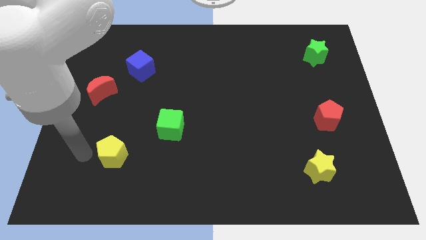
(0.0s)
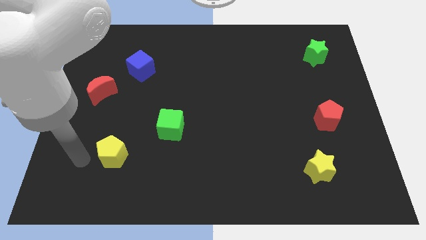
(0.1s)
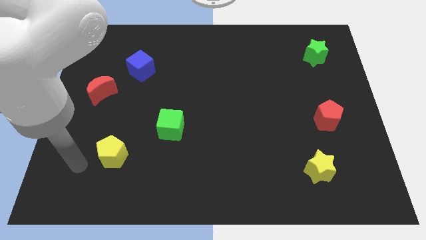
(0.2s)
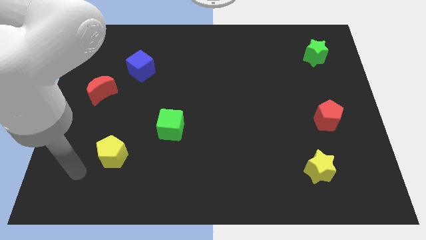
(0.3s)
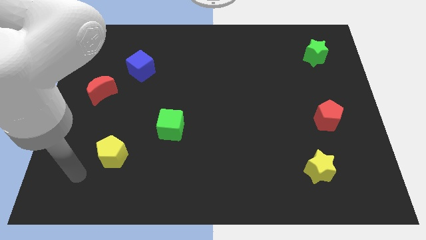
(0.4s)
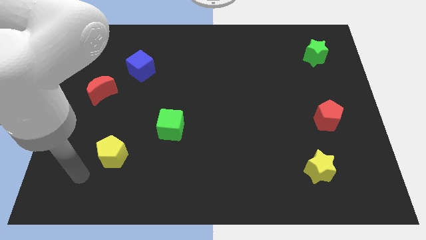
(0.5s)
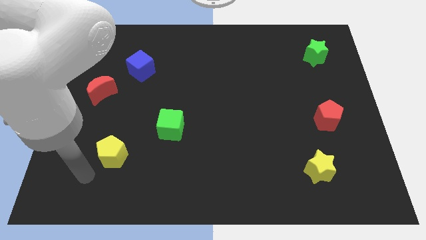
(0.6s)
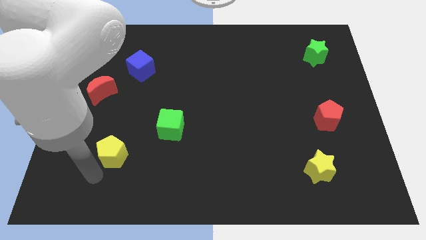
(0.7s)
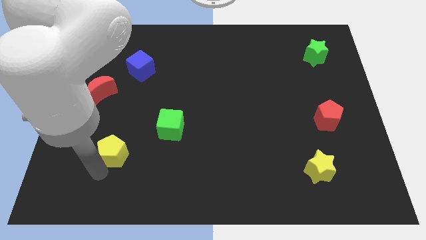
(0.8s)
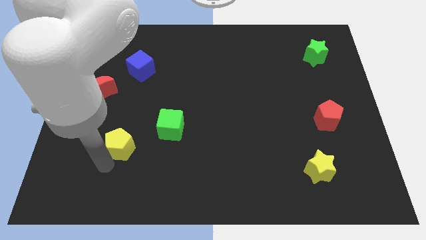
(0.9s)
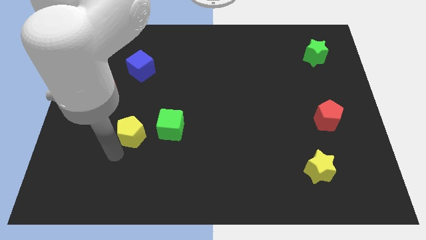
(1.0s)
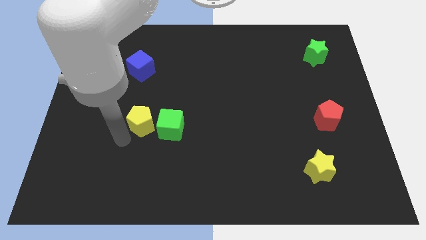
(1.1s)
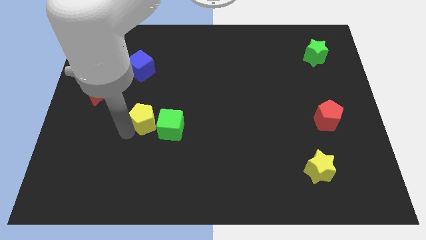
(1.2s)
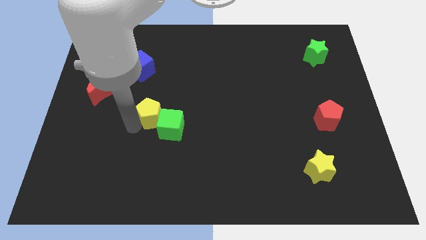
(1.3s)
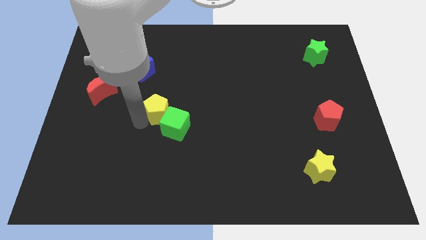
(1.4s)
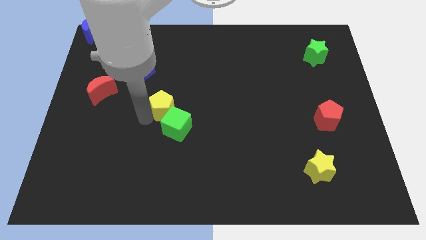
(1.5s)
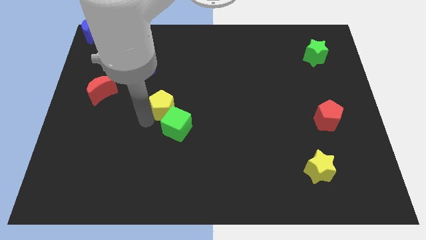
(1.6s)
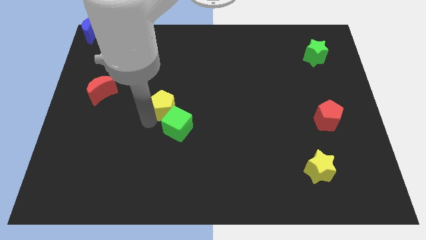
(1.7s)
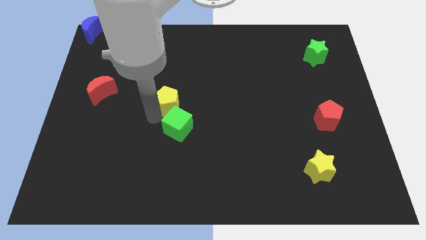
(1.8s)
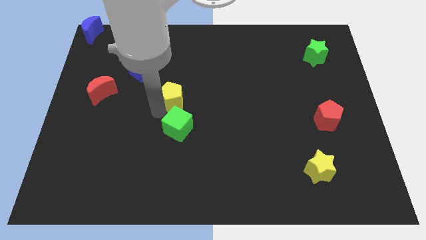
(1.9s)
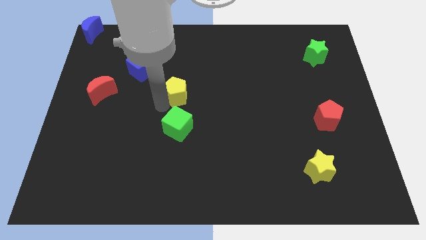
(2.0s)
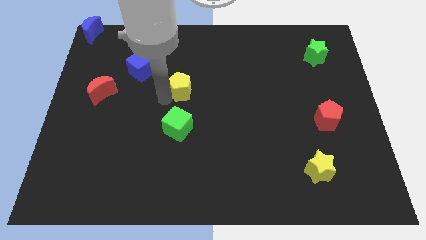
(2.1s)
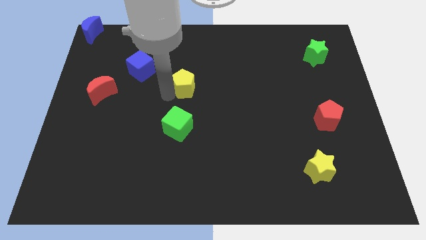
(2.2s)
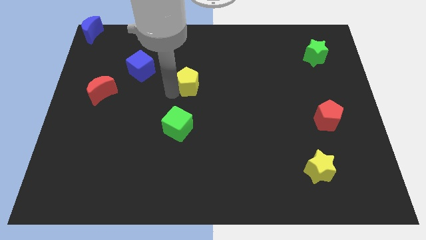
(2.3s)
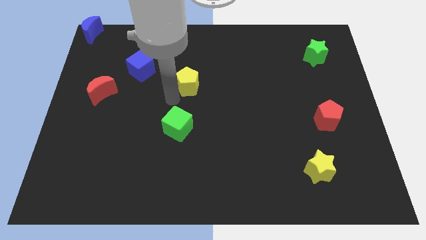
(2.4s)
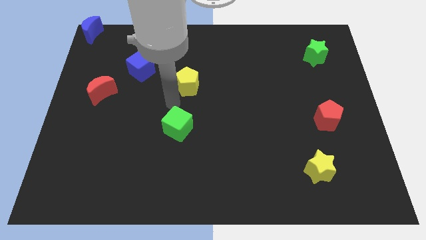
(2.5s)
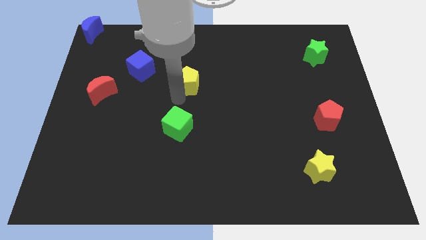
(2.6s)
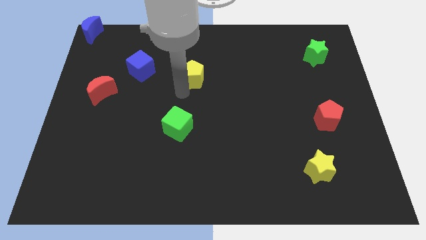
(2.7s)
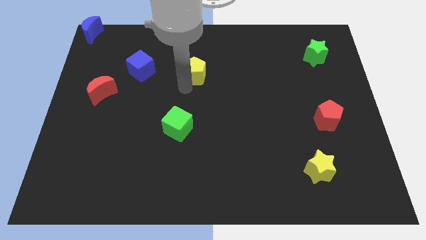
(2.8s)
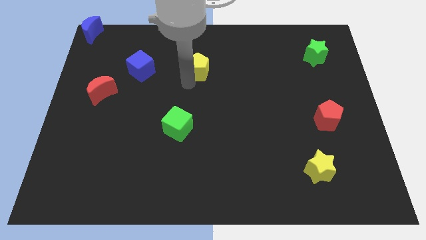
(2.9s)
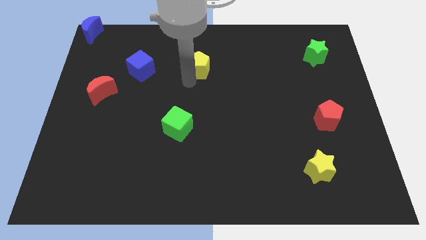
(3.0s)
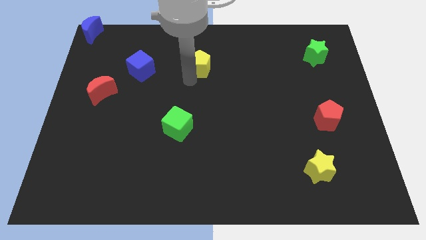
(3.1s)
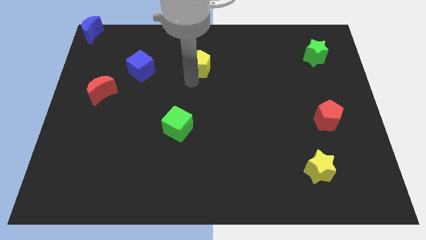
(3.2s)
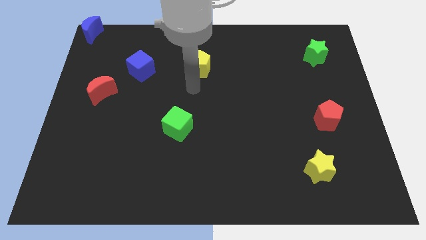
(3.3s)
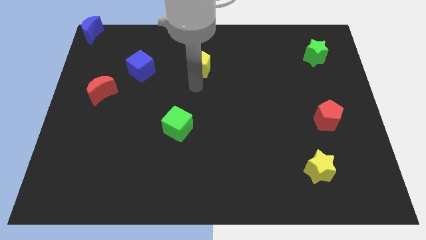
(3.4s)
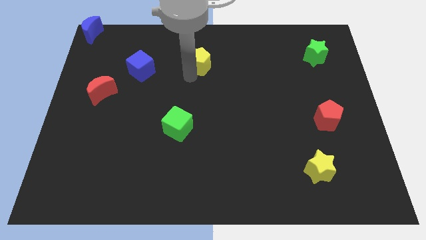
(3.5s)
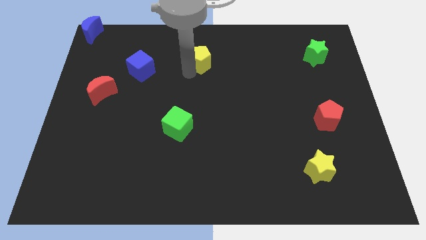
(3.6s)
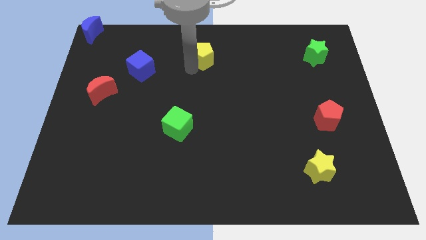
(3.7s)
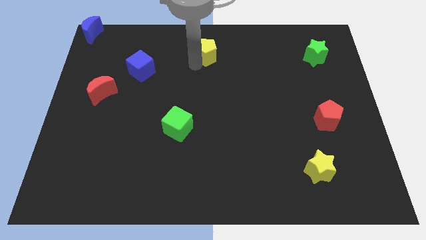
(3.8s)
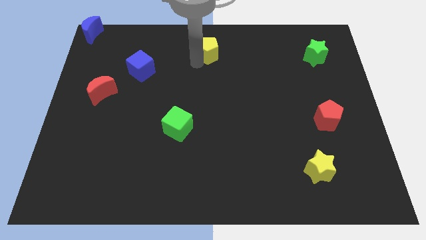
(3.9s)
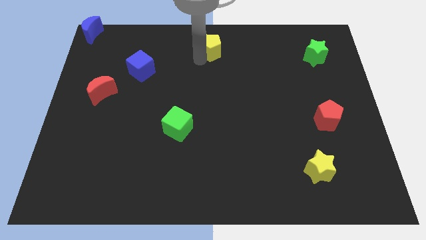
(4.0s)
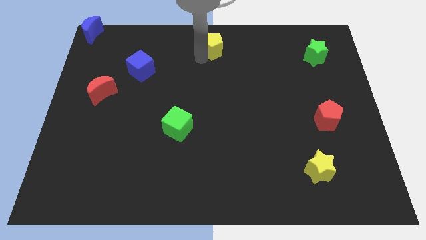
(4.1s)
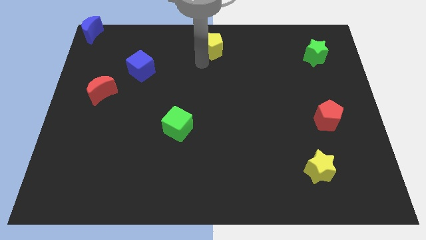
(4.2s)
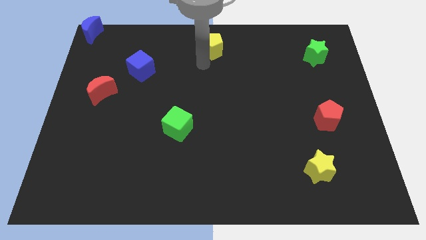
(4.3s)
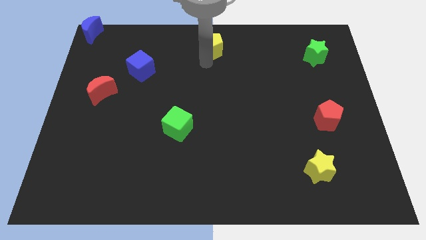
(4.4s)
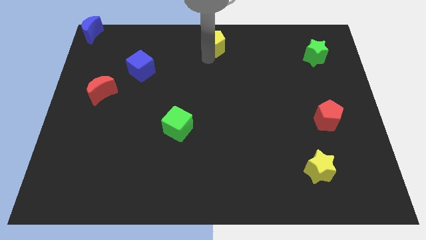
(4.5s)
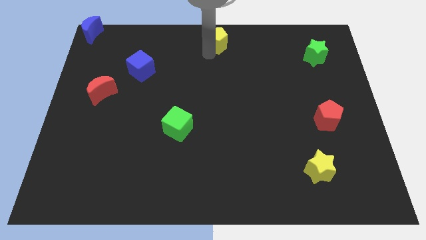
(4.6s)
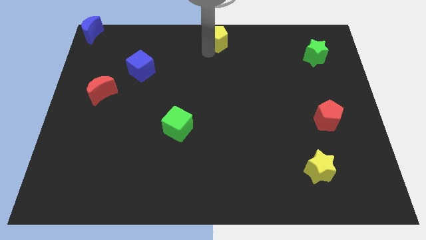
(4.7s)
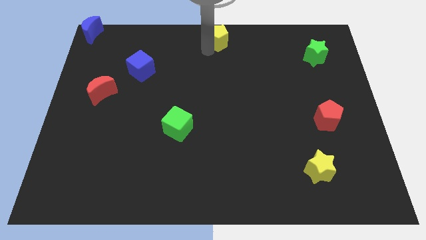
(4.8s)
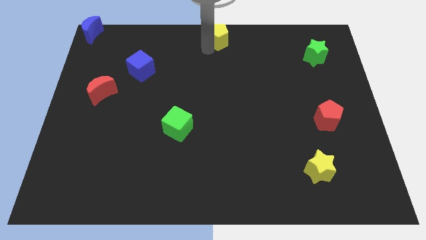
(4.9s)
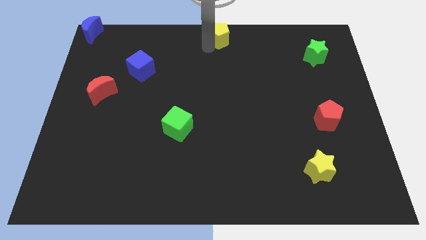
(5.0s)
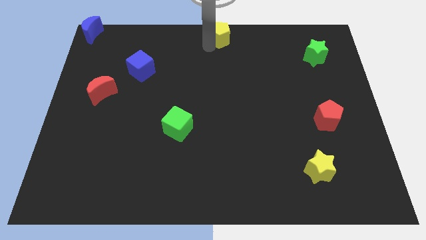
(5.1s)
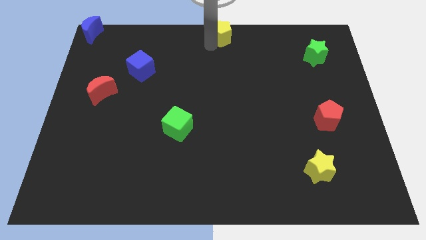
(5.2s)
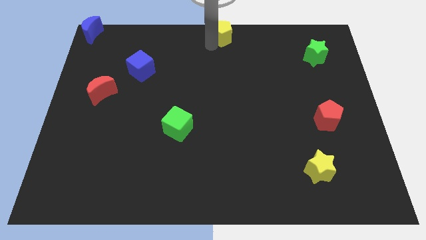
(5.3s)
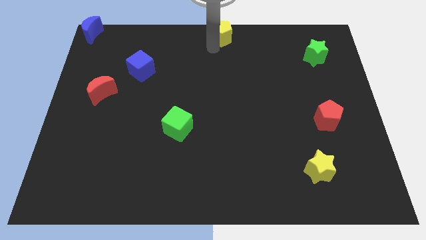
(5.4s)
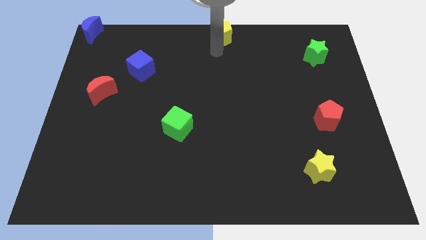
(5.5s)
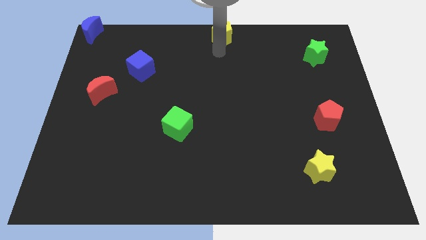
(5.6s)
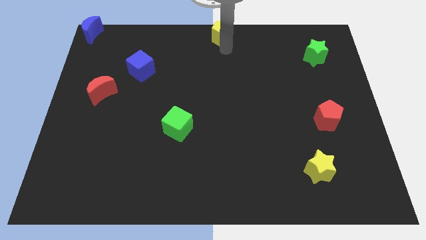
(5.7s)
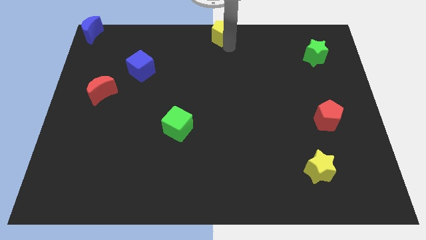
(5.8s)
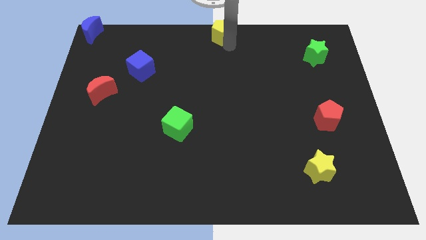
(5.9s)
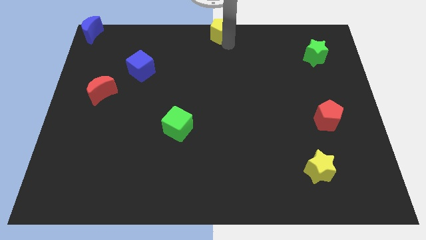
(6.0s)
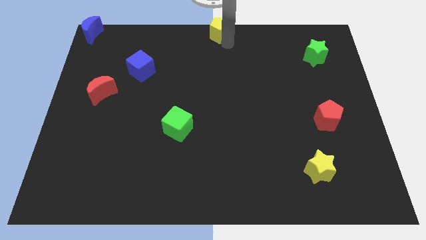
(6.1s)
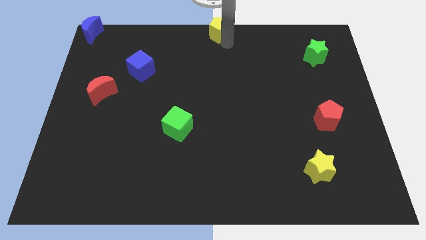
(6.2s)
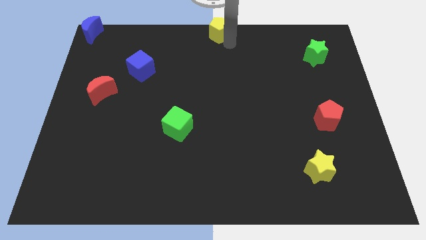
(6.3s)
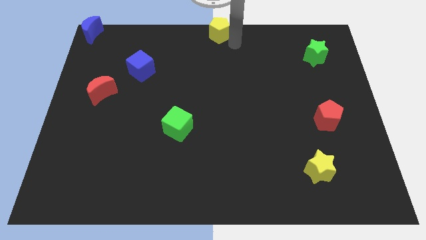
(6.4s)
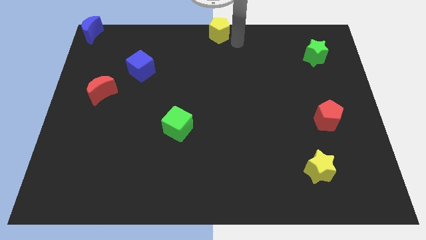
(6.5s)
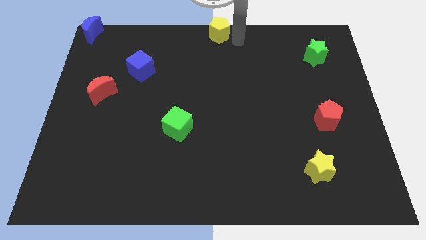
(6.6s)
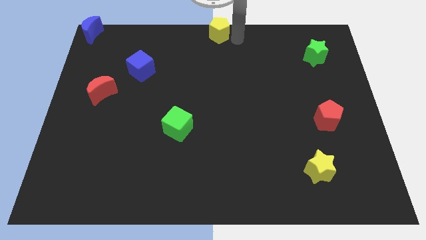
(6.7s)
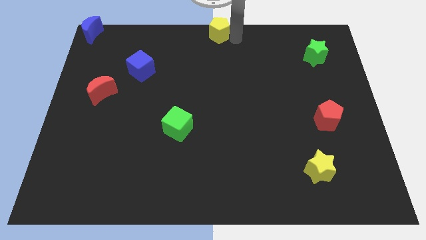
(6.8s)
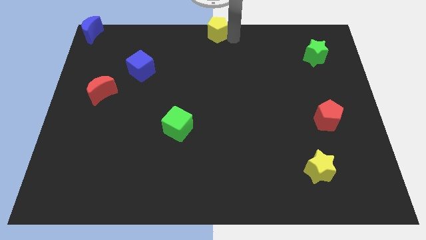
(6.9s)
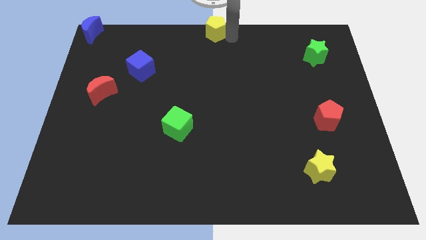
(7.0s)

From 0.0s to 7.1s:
push the yellow pentagon to the center top of the board

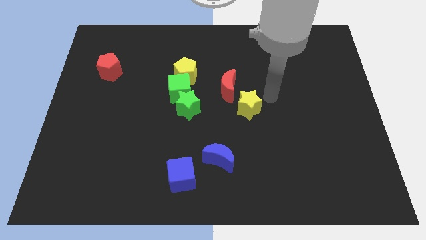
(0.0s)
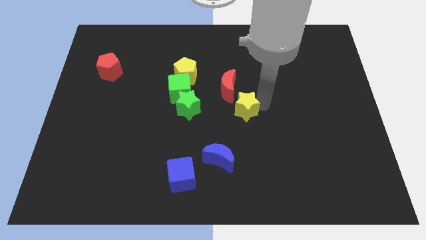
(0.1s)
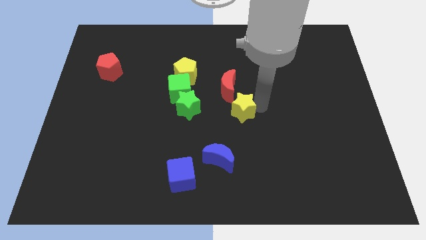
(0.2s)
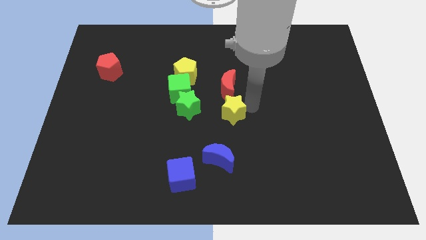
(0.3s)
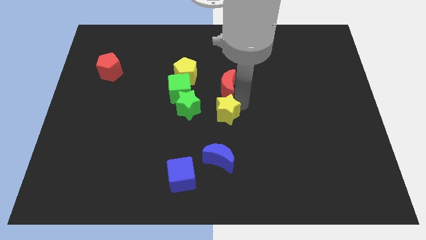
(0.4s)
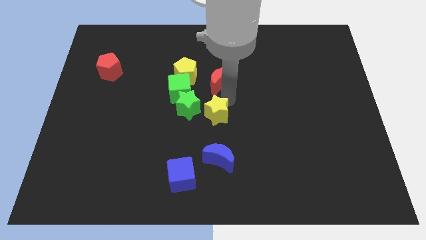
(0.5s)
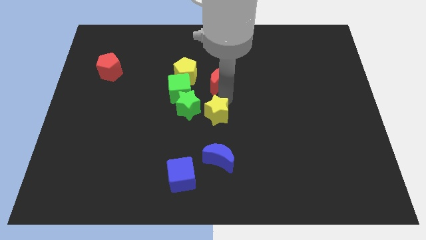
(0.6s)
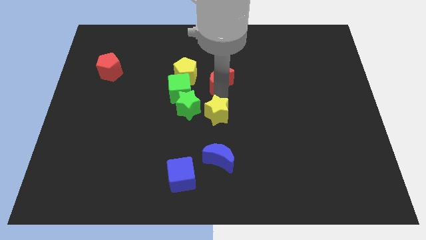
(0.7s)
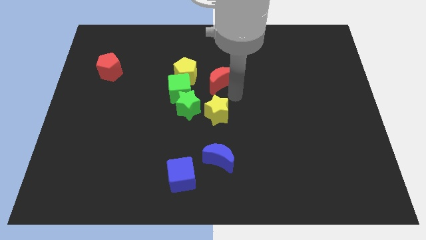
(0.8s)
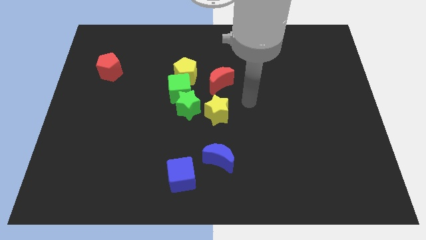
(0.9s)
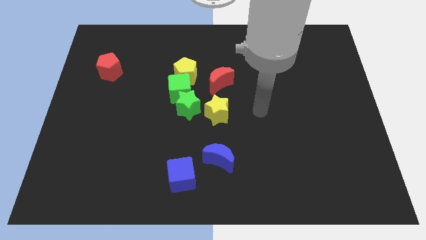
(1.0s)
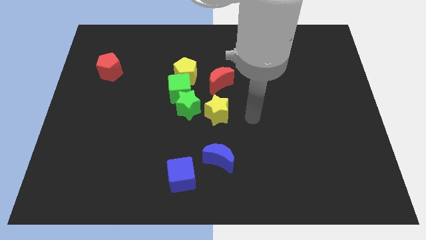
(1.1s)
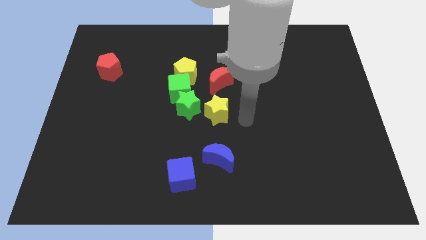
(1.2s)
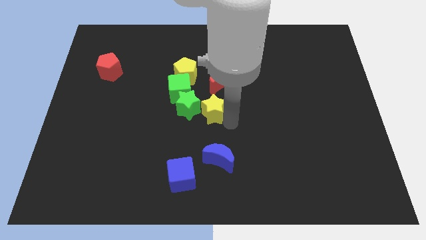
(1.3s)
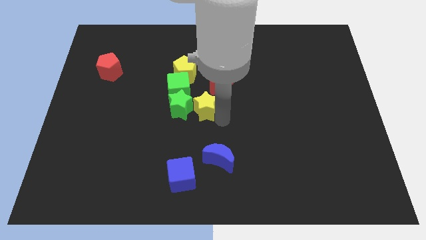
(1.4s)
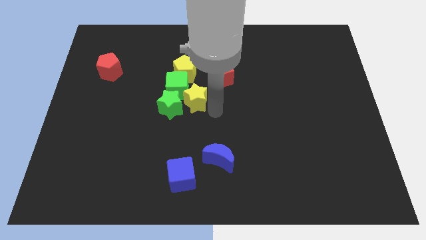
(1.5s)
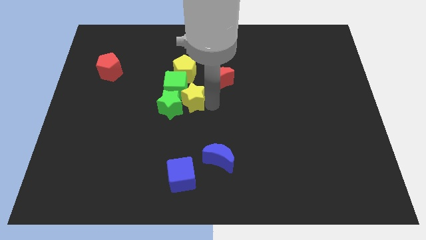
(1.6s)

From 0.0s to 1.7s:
move the yellow star into the green star

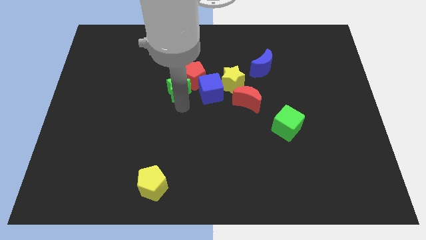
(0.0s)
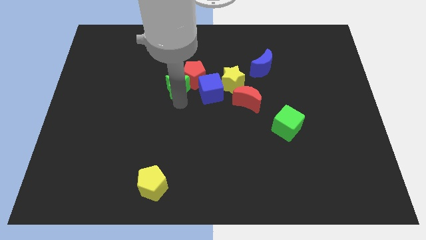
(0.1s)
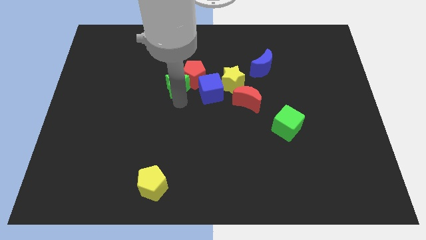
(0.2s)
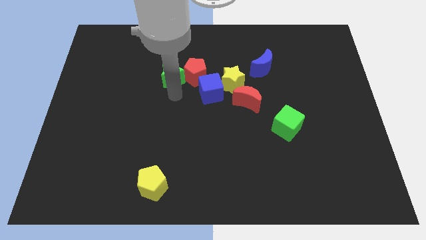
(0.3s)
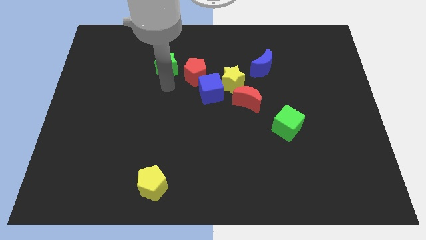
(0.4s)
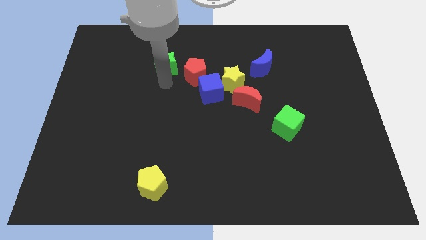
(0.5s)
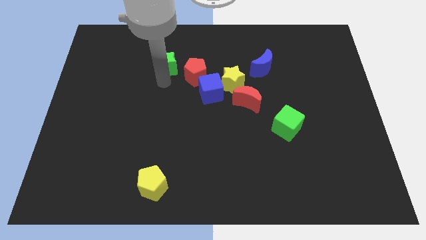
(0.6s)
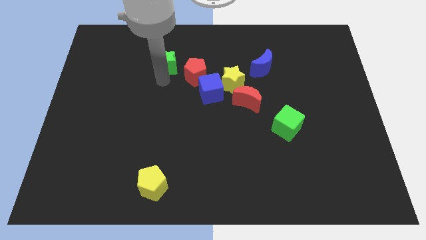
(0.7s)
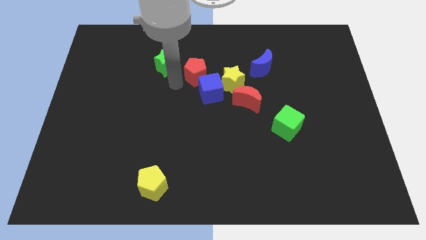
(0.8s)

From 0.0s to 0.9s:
separate the green star from red pentagon
